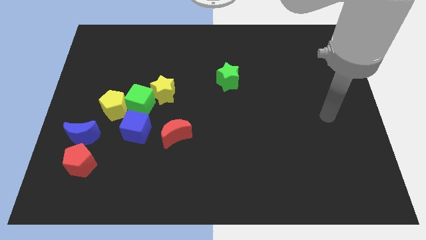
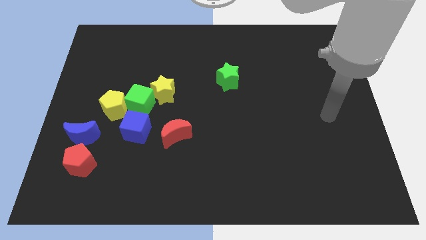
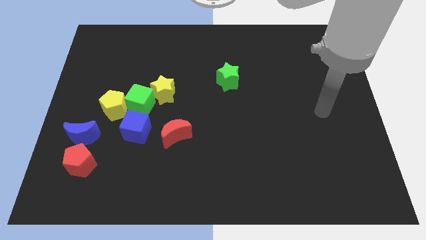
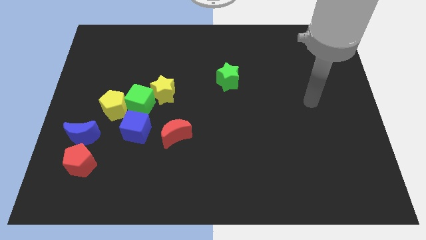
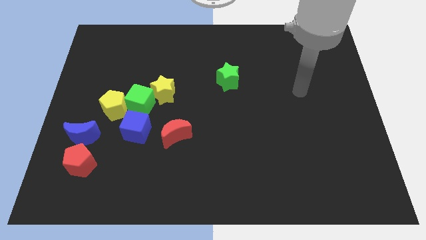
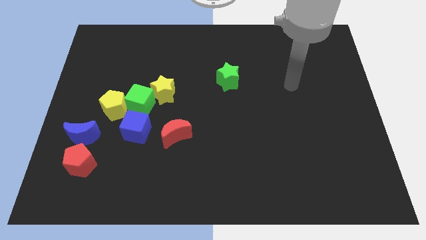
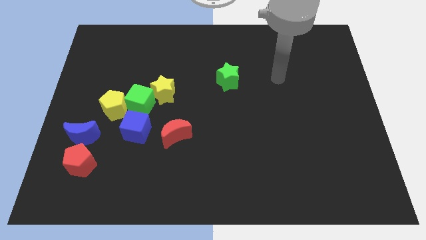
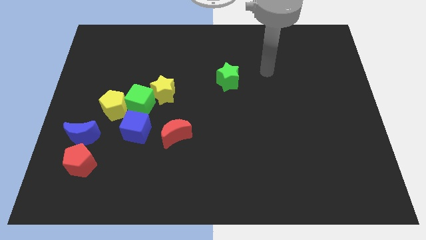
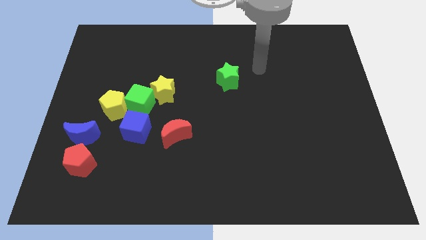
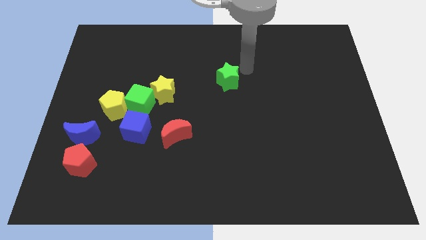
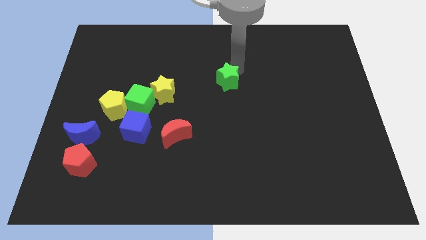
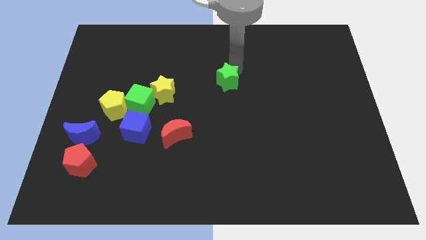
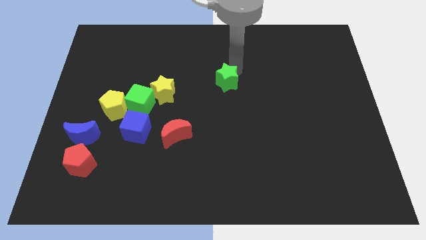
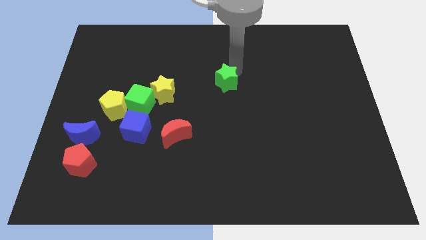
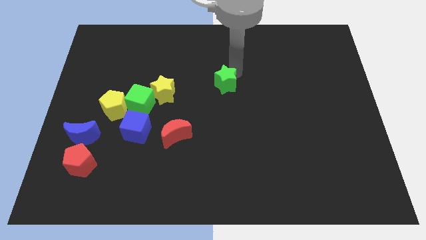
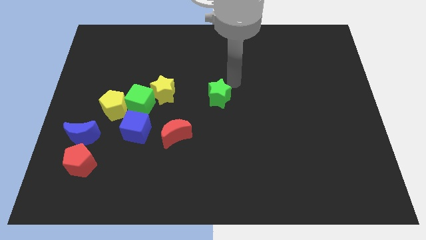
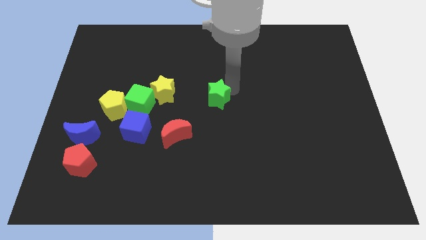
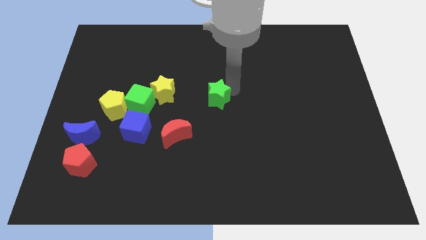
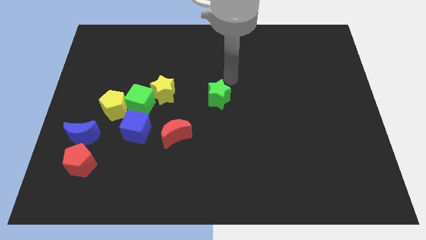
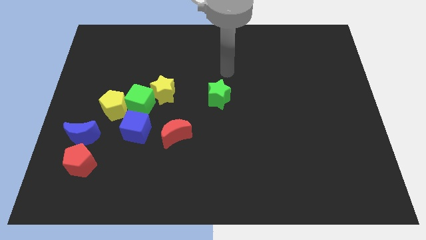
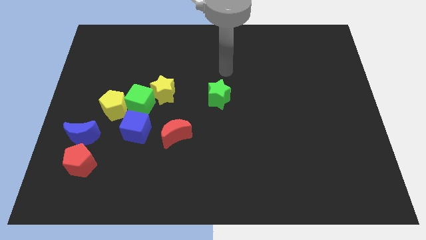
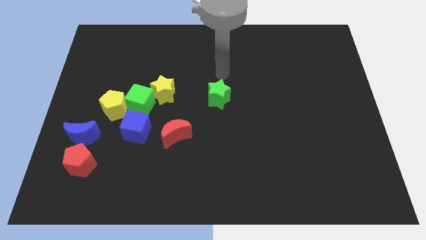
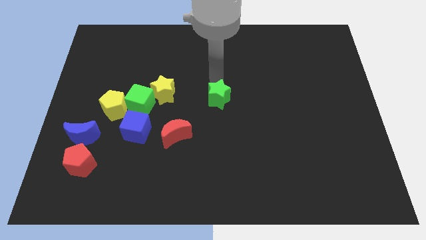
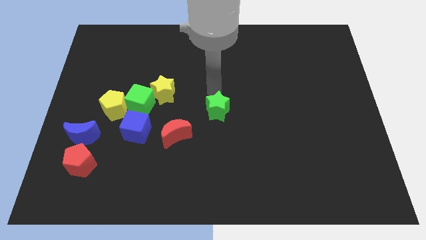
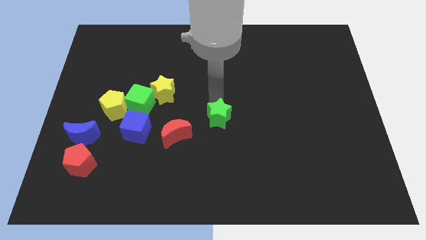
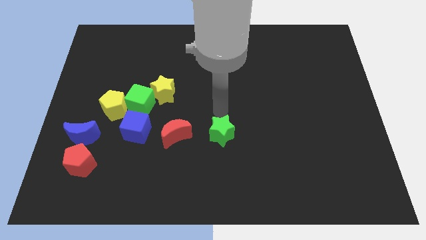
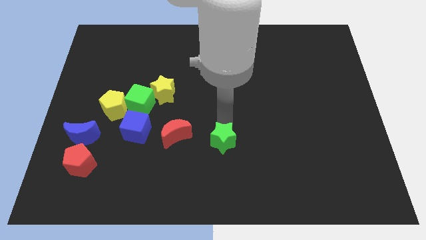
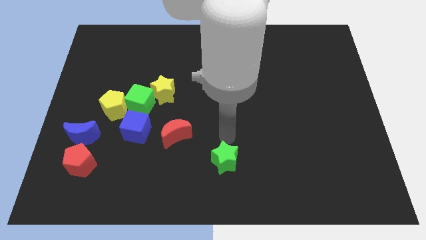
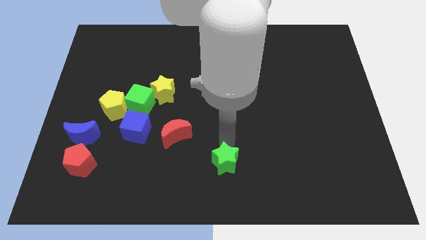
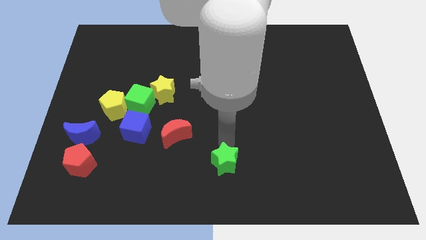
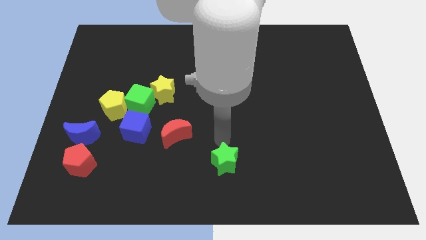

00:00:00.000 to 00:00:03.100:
push the green star downwards at the bottom center

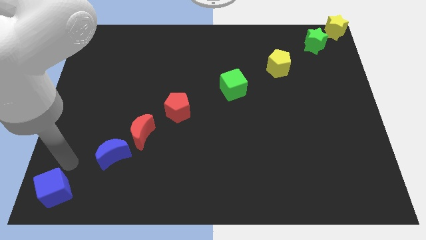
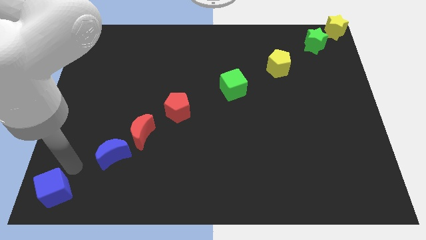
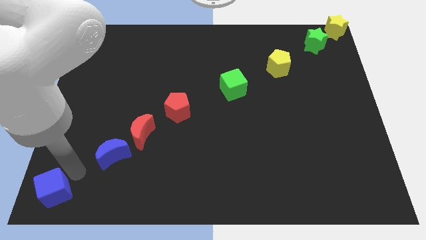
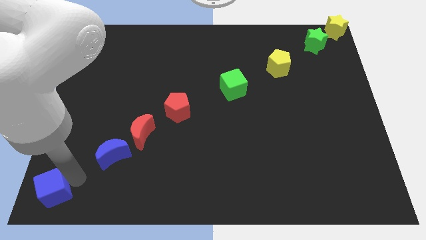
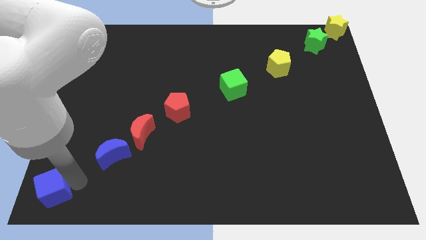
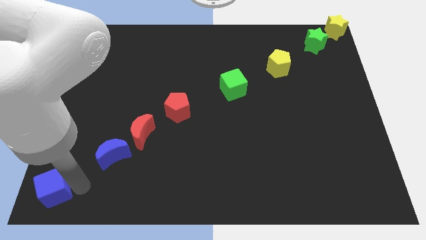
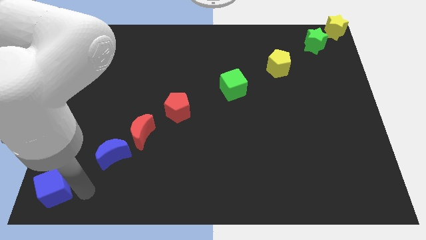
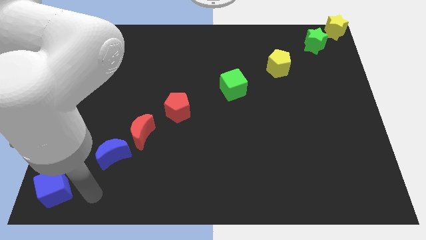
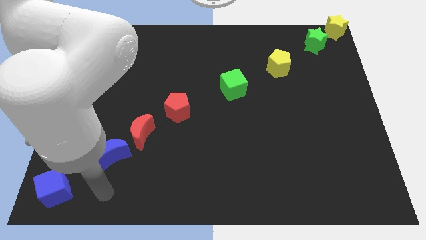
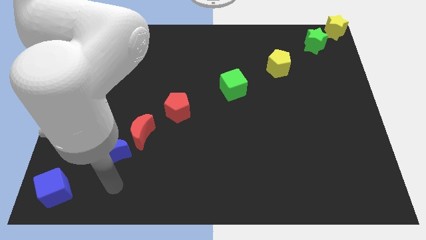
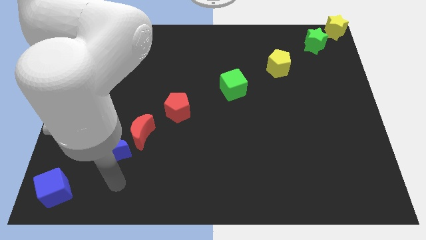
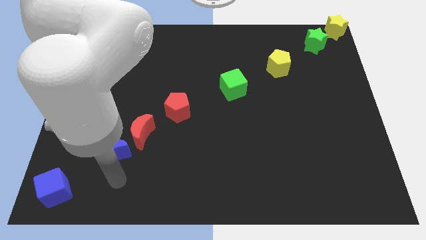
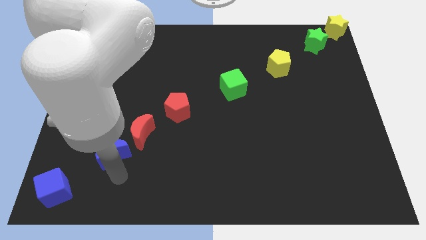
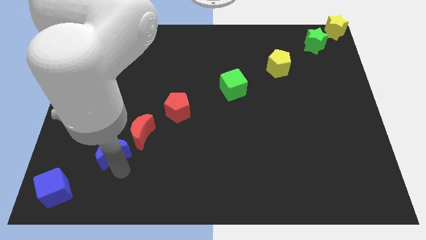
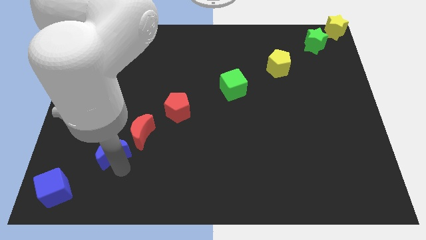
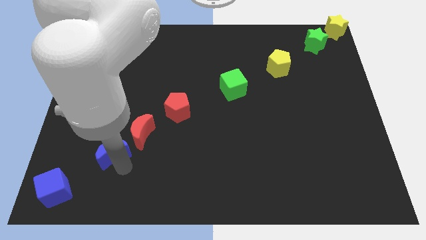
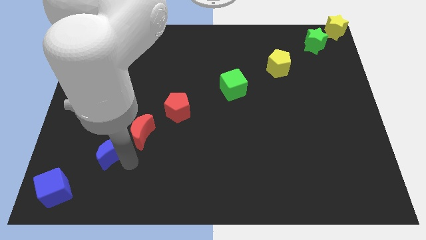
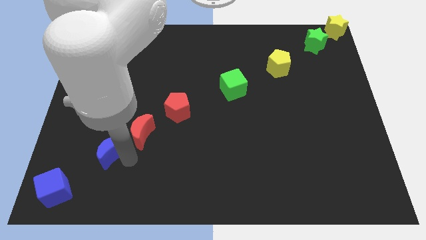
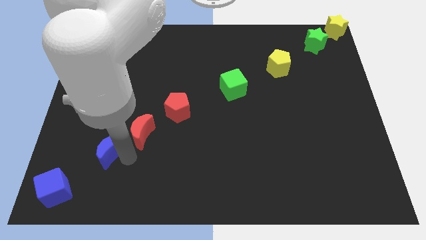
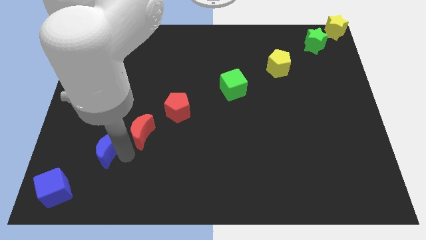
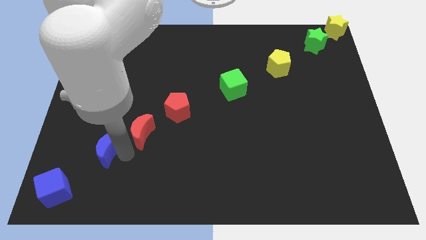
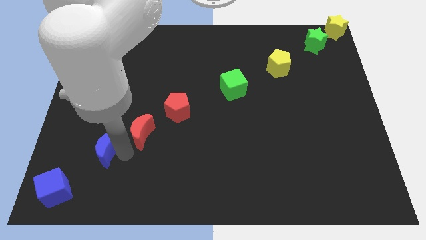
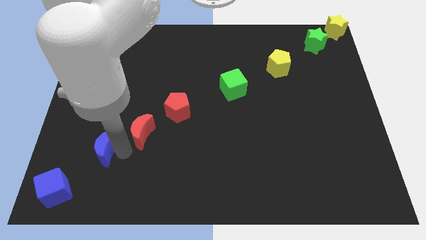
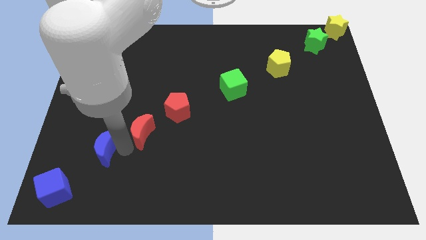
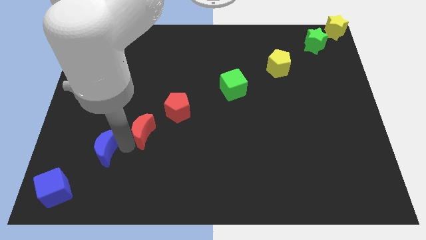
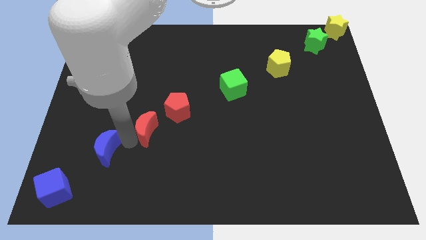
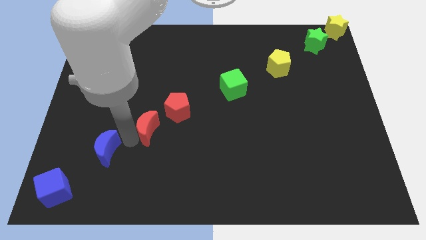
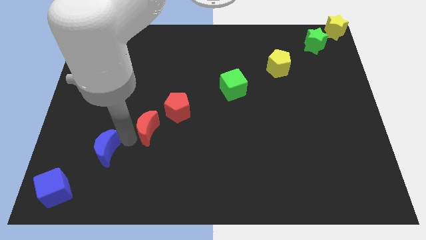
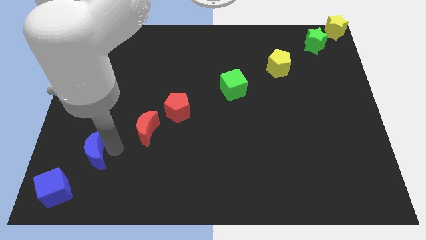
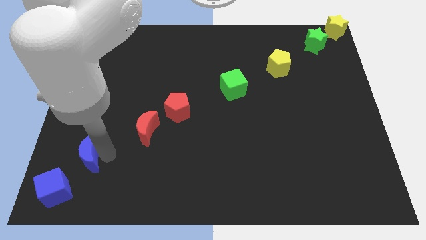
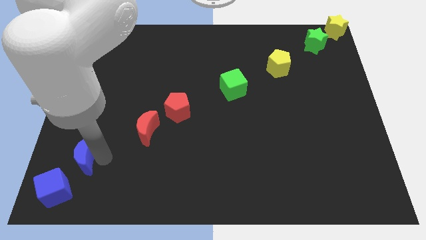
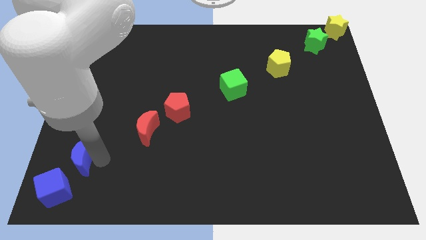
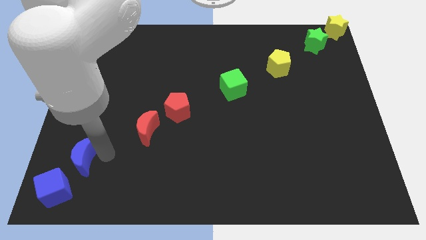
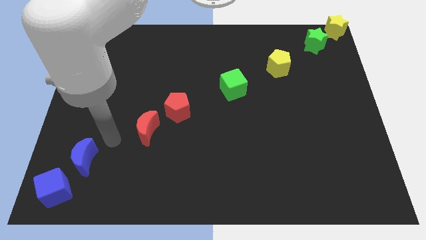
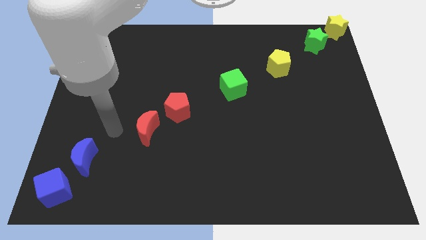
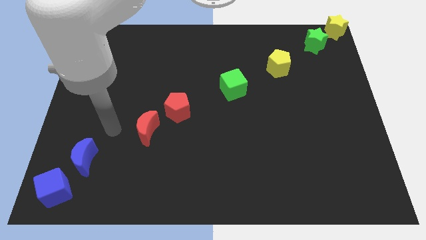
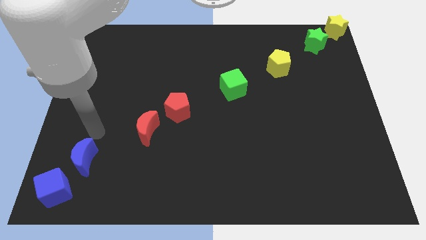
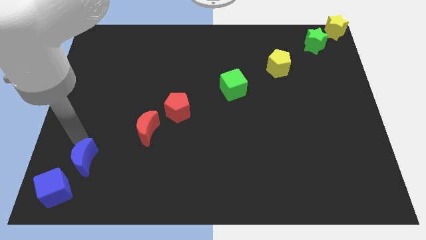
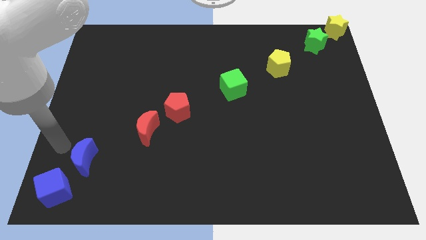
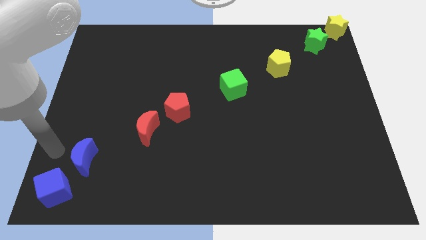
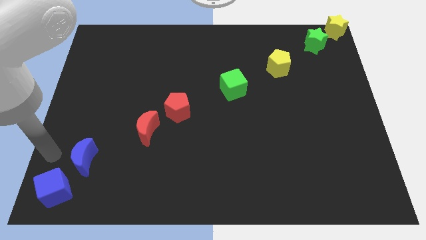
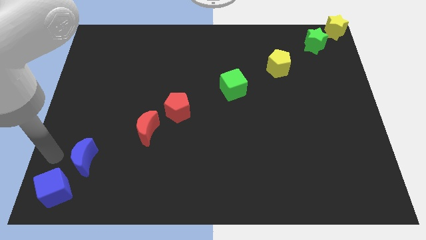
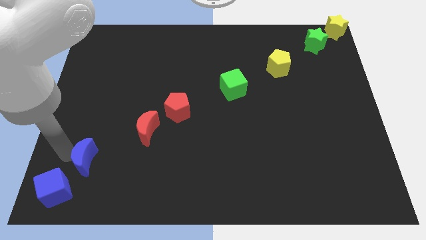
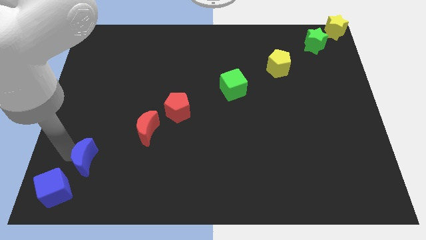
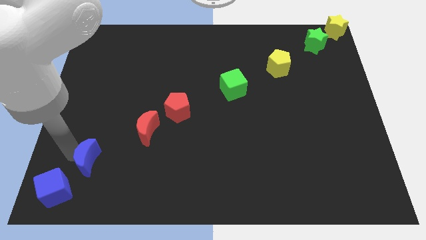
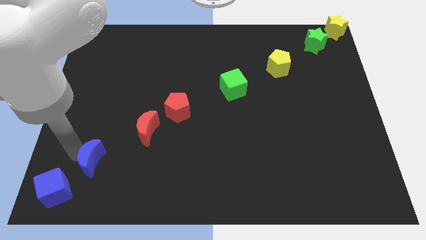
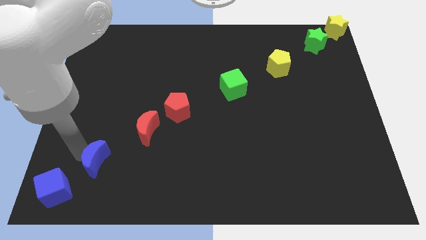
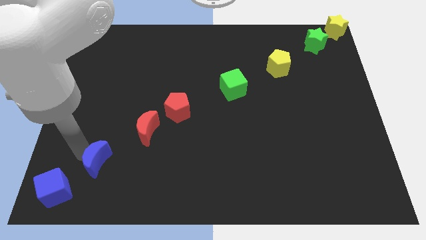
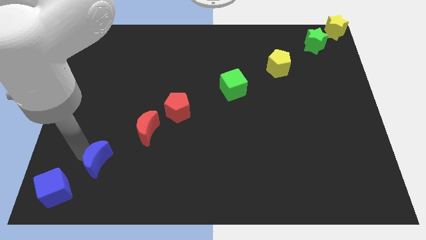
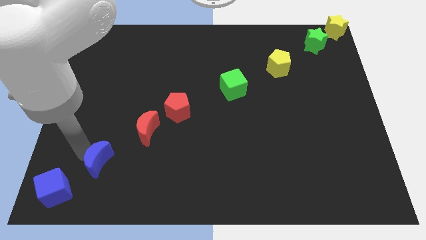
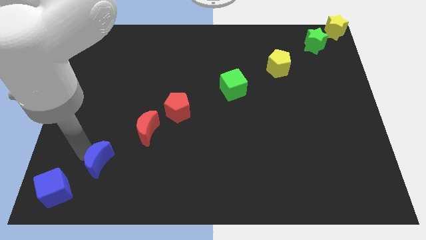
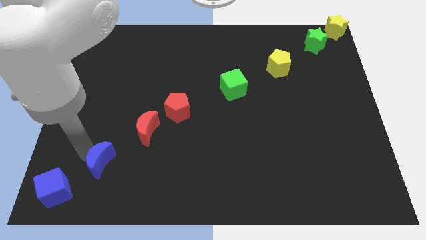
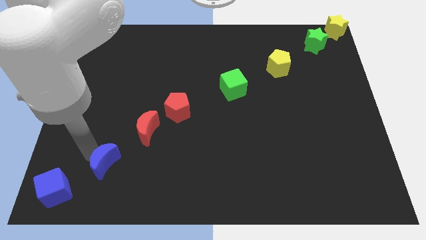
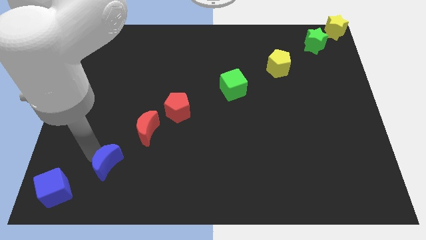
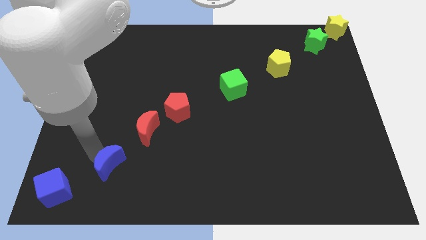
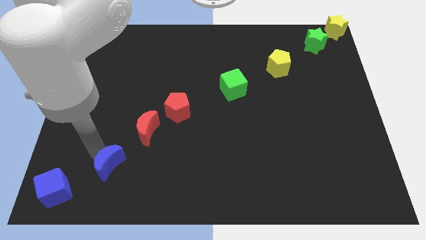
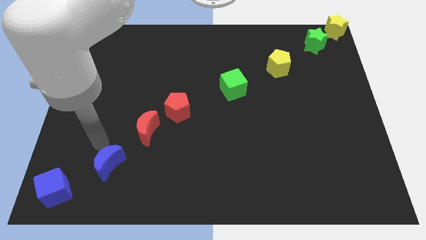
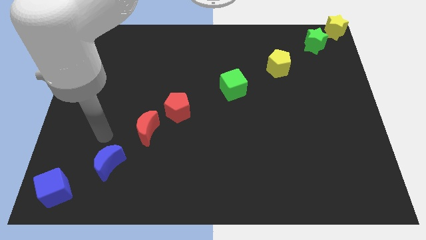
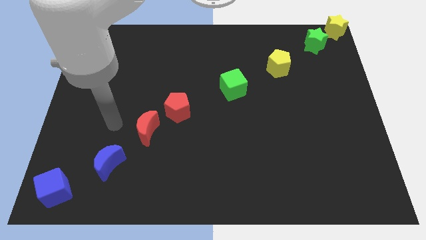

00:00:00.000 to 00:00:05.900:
place the blue moon in between the red moon and the blue cube
